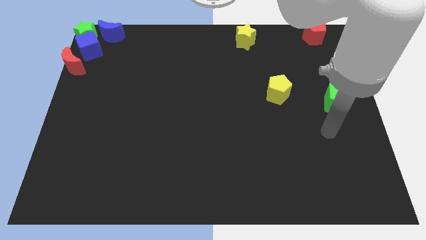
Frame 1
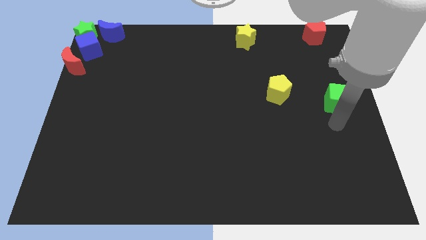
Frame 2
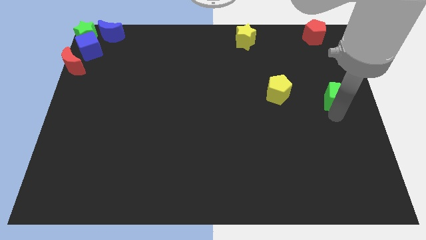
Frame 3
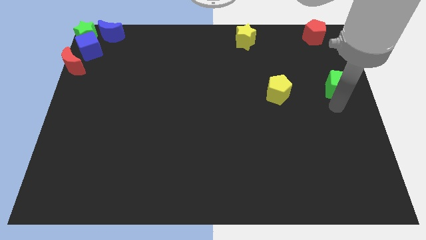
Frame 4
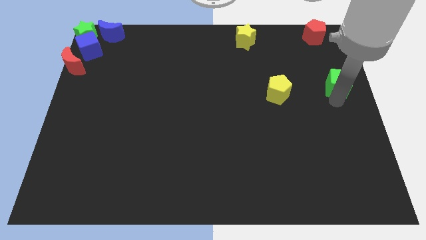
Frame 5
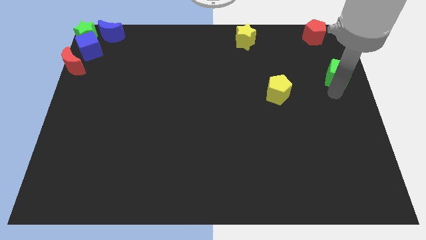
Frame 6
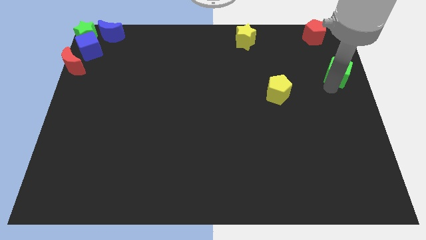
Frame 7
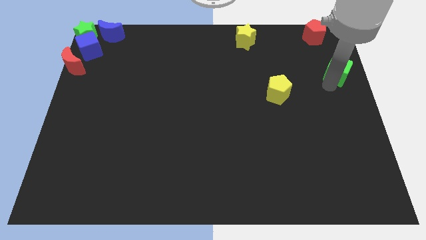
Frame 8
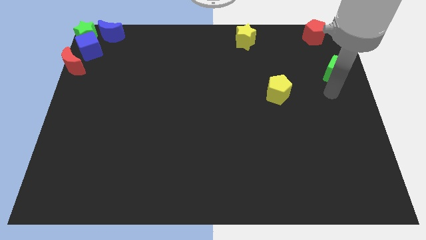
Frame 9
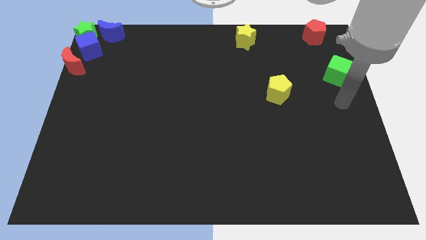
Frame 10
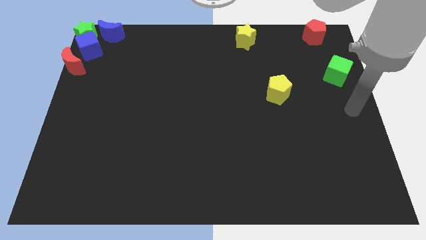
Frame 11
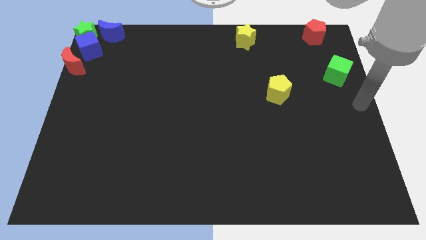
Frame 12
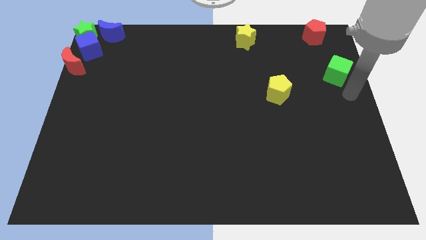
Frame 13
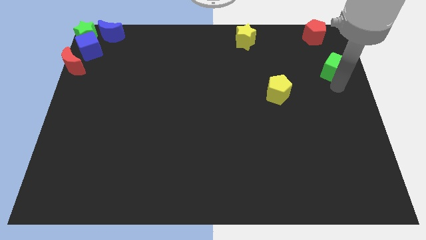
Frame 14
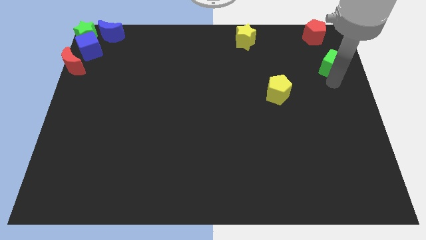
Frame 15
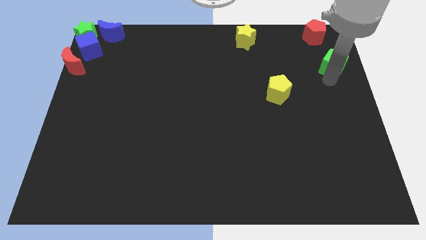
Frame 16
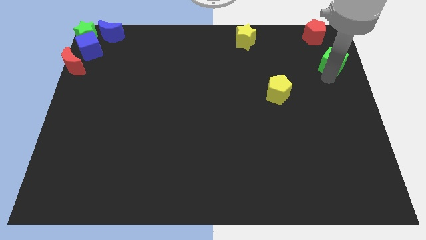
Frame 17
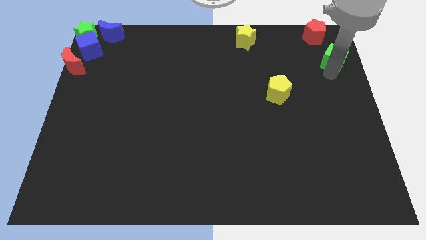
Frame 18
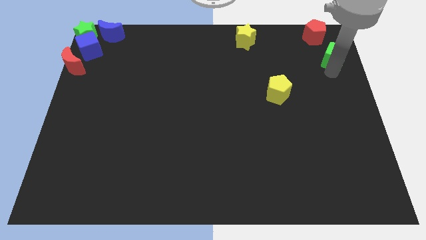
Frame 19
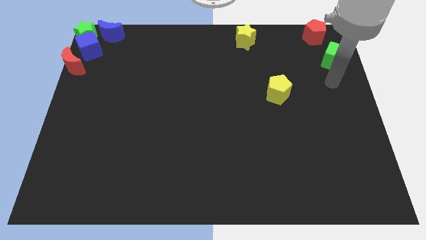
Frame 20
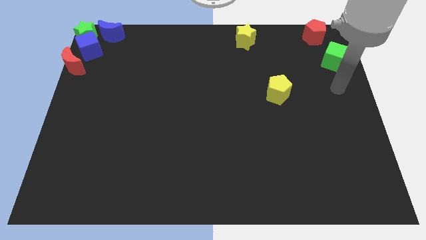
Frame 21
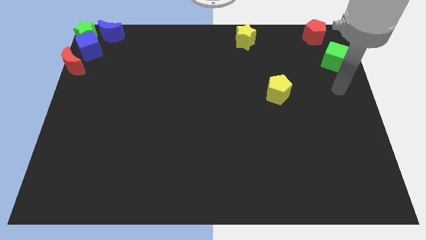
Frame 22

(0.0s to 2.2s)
move the green cube towards the red pentagon

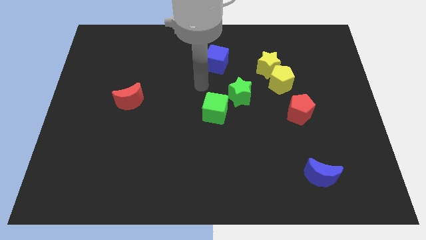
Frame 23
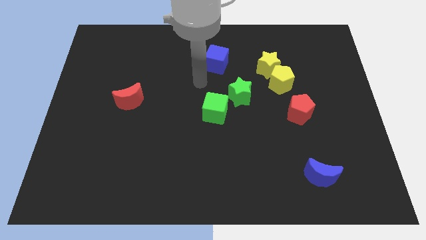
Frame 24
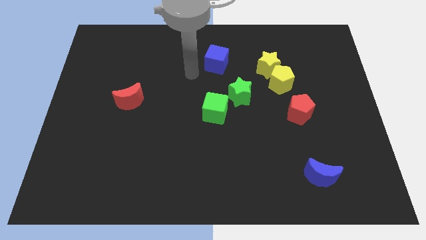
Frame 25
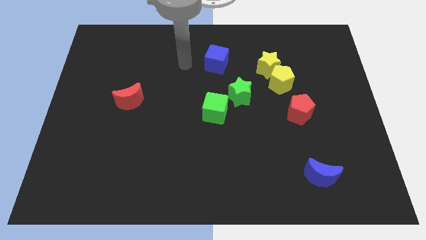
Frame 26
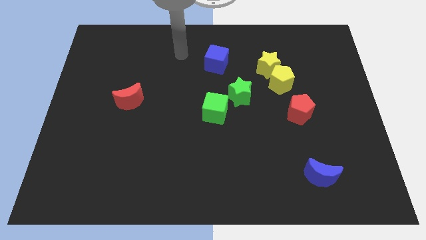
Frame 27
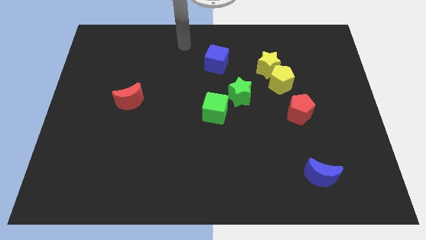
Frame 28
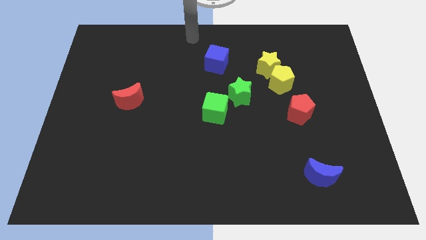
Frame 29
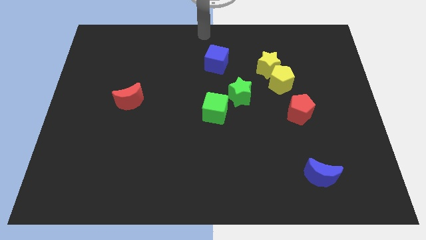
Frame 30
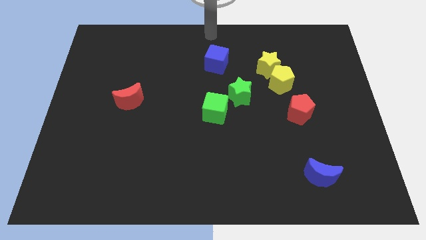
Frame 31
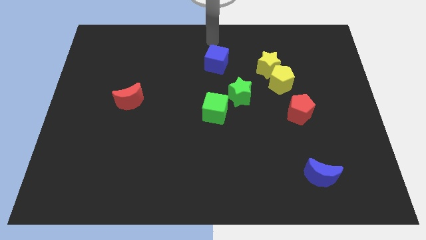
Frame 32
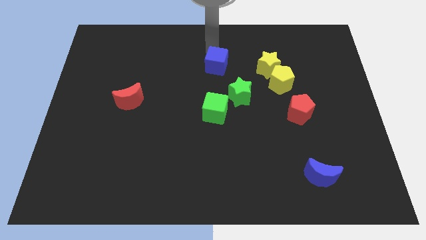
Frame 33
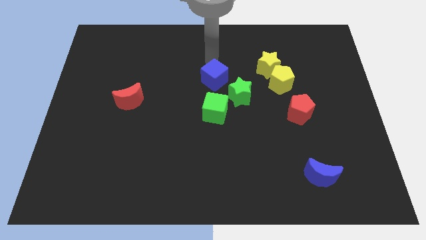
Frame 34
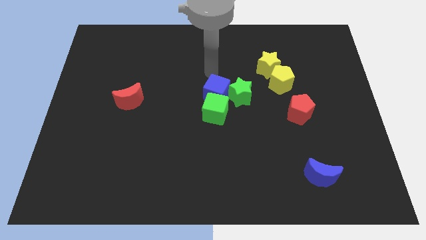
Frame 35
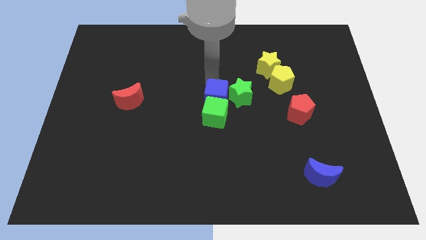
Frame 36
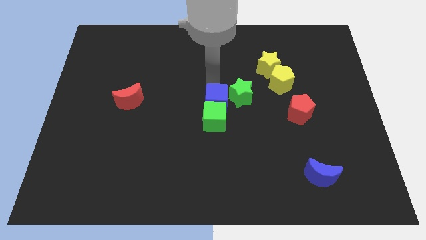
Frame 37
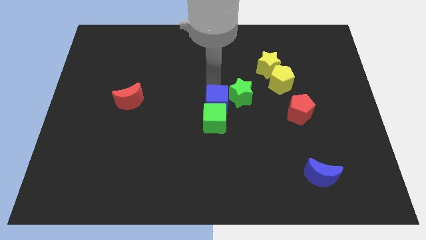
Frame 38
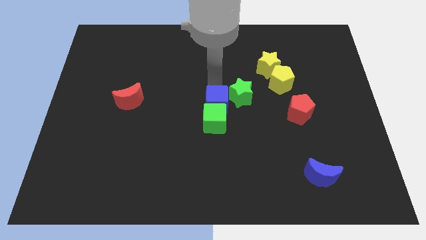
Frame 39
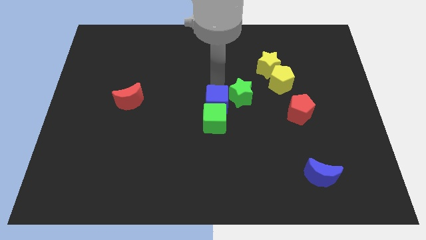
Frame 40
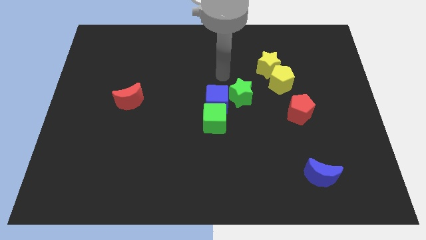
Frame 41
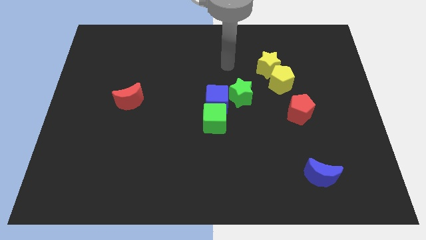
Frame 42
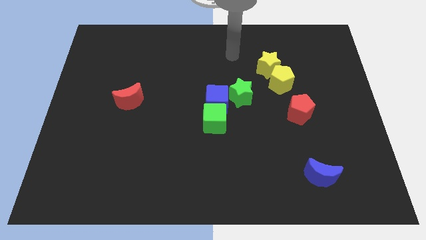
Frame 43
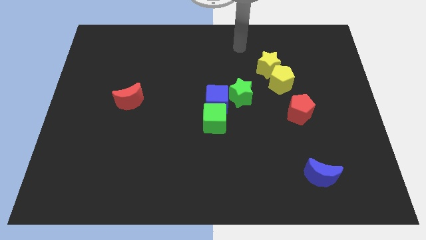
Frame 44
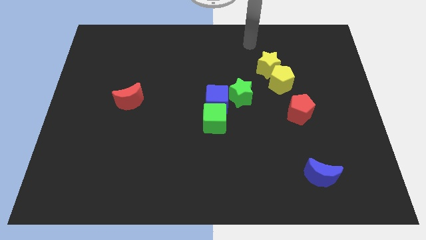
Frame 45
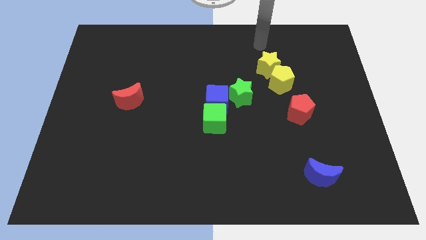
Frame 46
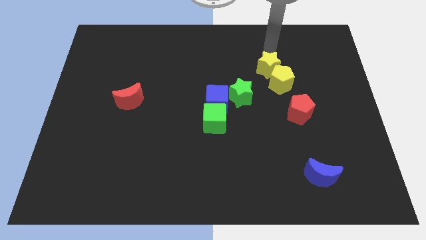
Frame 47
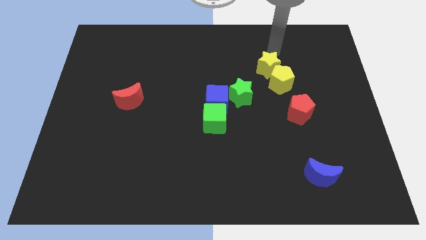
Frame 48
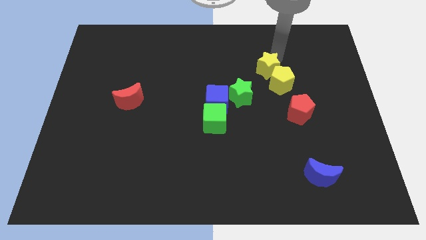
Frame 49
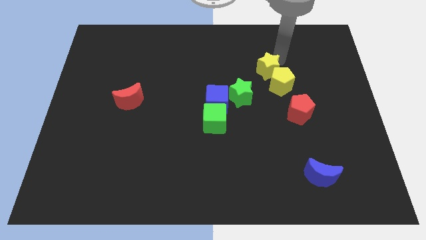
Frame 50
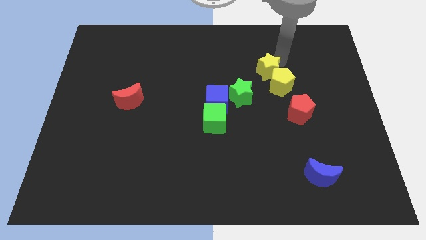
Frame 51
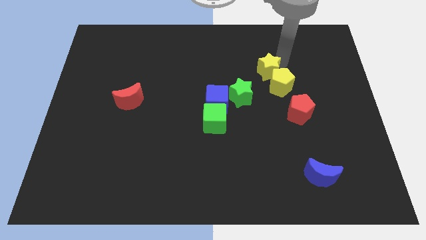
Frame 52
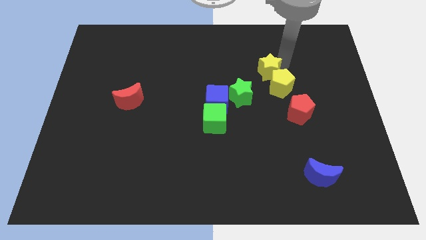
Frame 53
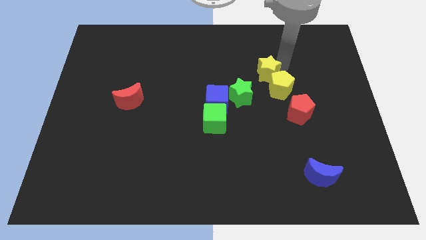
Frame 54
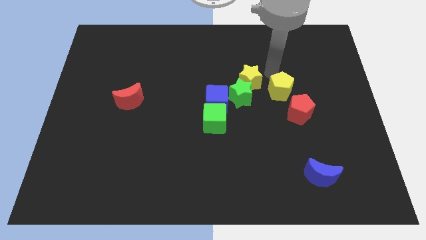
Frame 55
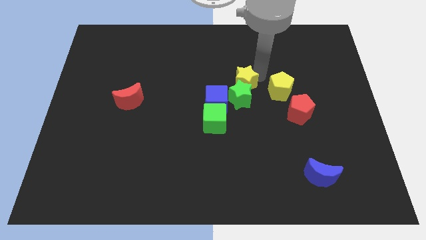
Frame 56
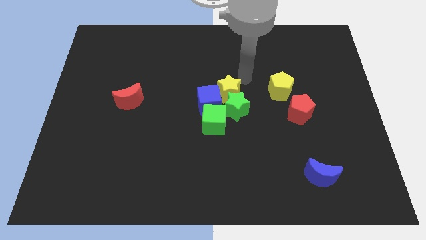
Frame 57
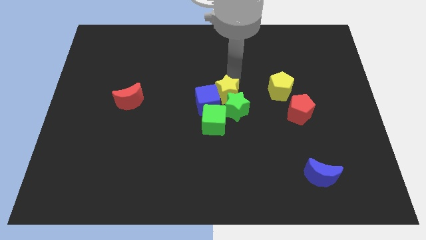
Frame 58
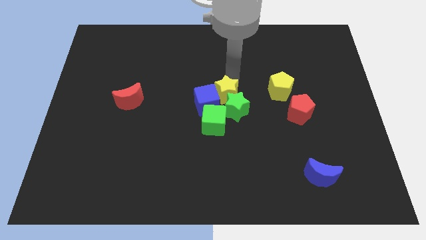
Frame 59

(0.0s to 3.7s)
place the blue cube and the yellow star above the green blocks

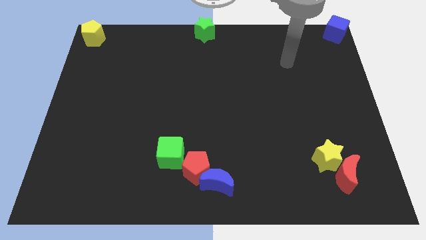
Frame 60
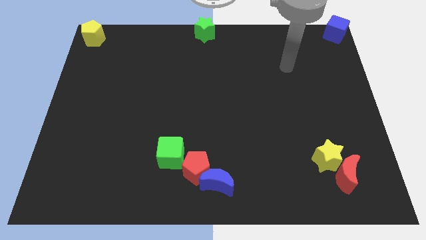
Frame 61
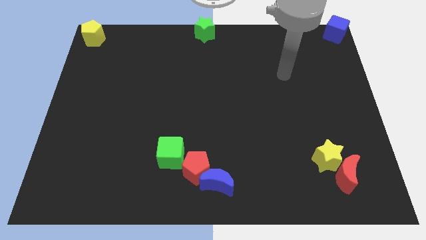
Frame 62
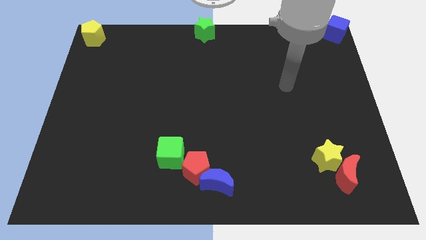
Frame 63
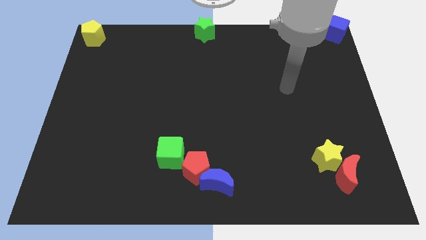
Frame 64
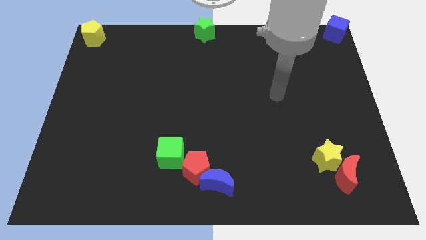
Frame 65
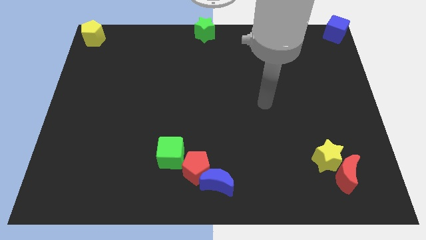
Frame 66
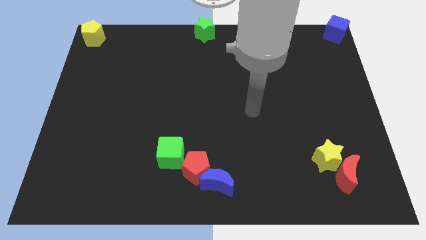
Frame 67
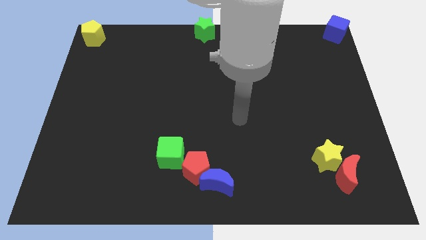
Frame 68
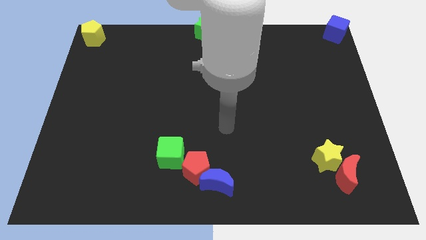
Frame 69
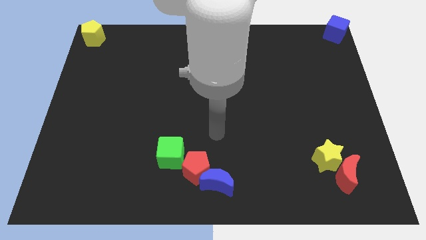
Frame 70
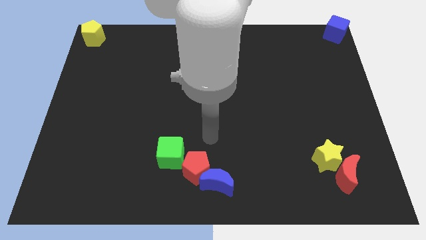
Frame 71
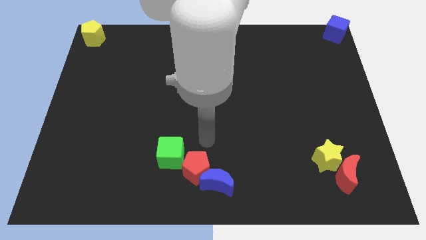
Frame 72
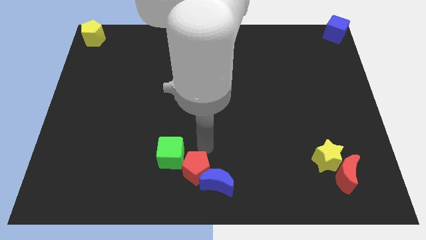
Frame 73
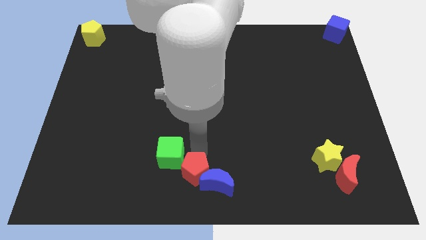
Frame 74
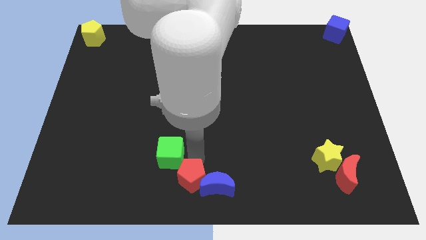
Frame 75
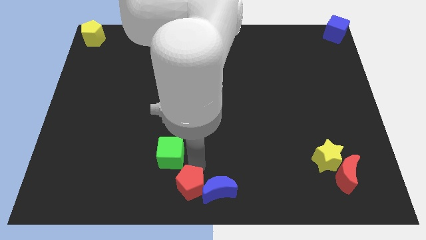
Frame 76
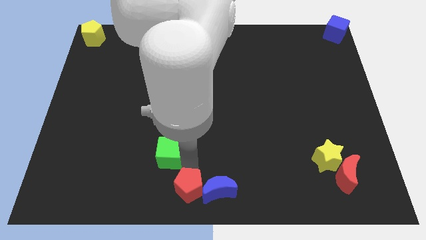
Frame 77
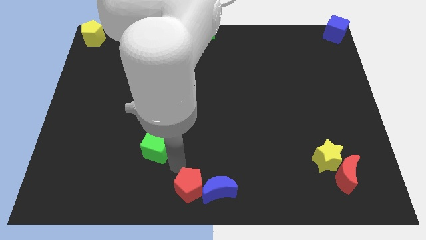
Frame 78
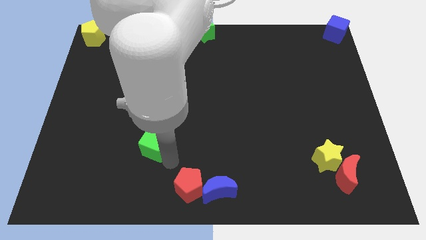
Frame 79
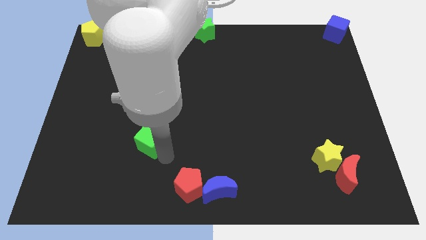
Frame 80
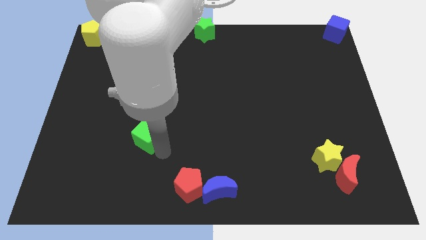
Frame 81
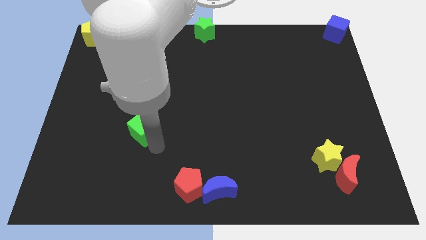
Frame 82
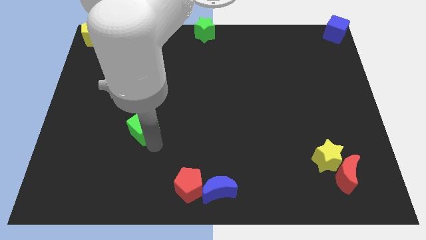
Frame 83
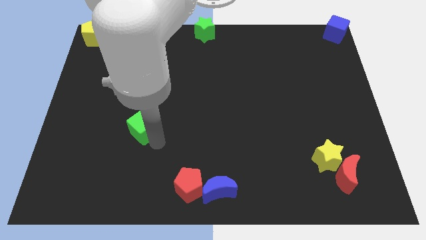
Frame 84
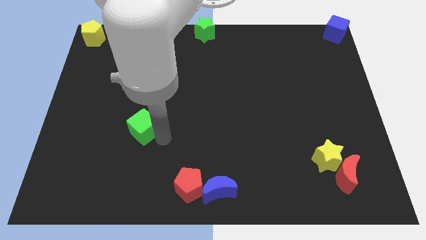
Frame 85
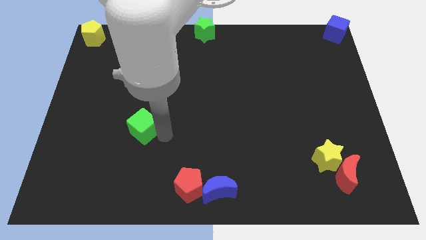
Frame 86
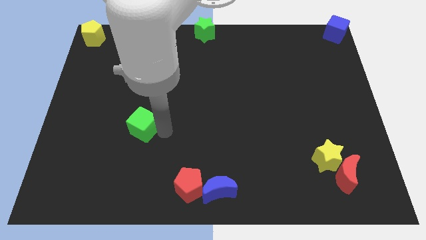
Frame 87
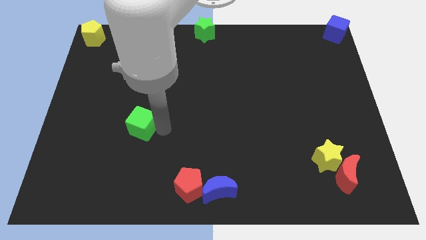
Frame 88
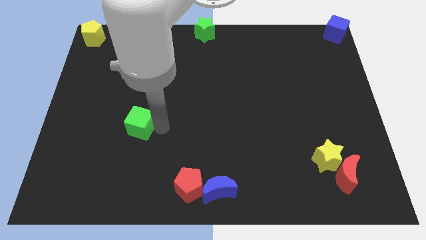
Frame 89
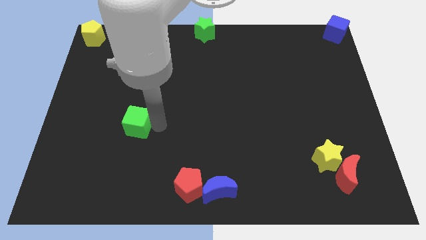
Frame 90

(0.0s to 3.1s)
separate green cube from red pentagon
